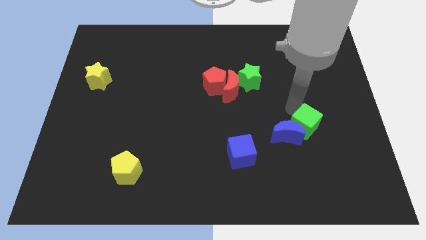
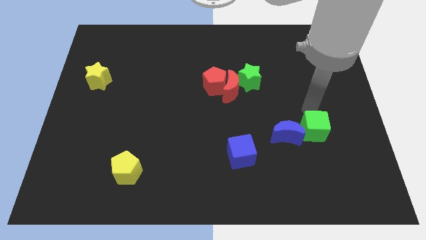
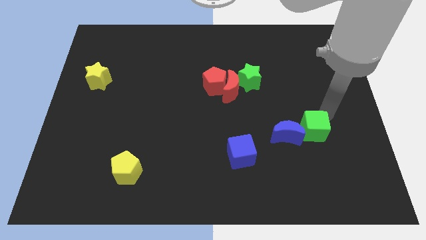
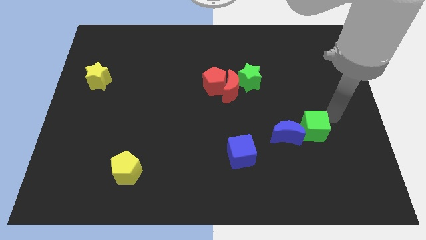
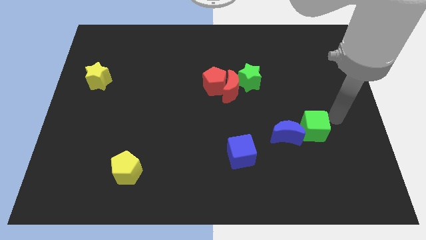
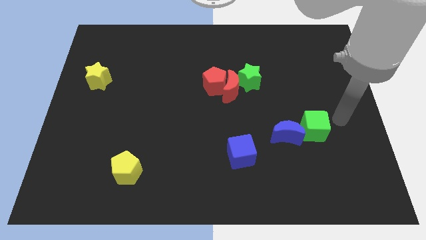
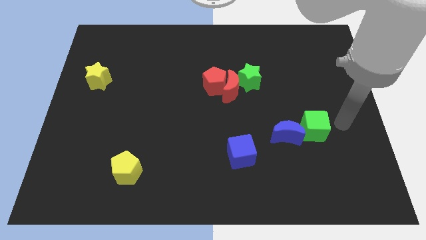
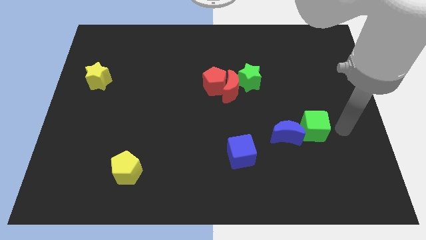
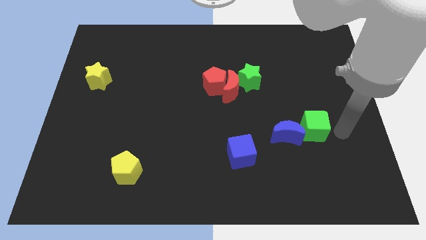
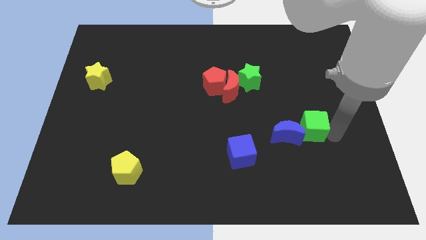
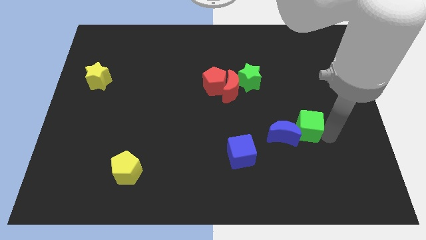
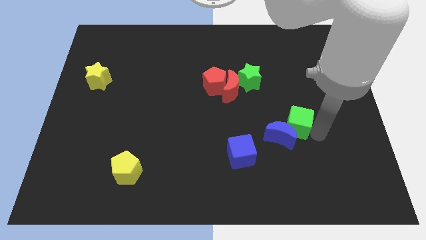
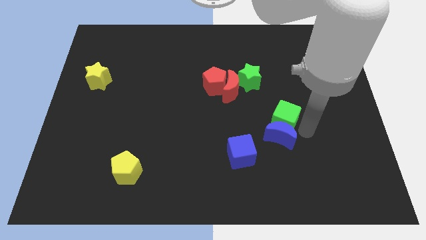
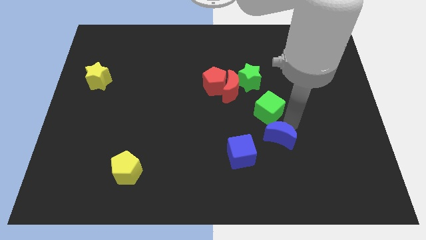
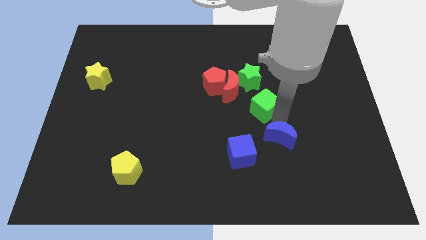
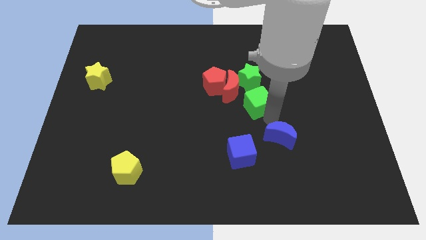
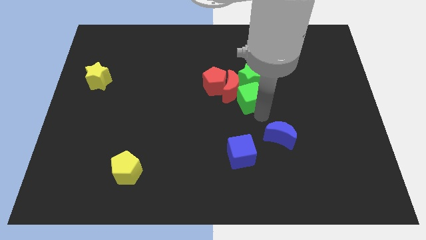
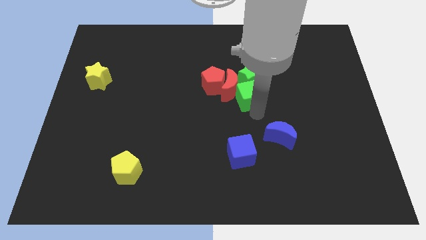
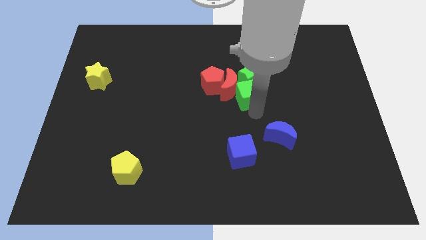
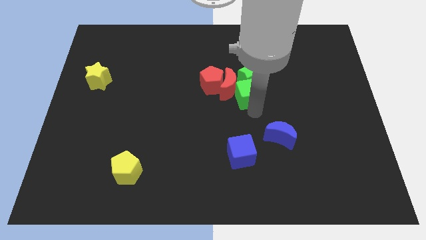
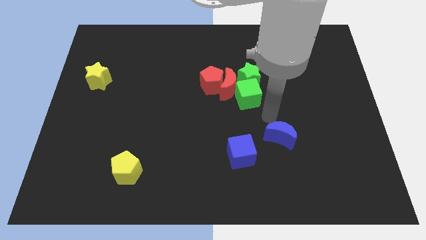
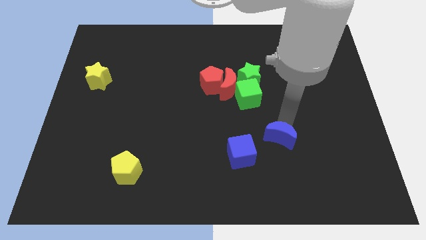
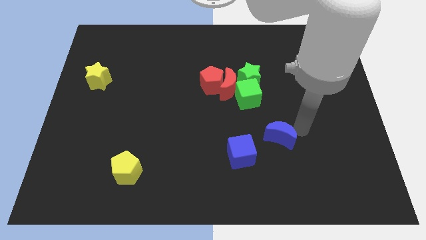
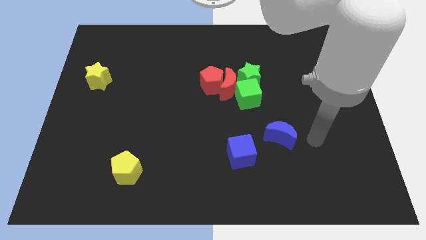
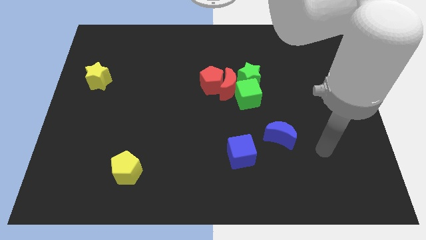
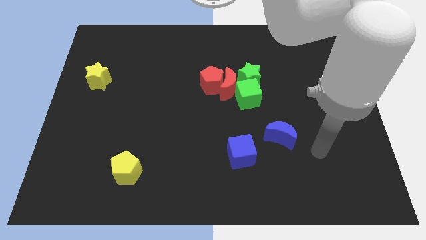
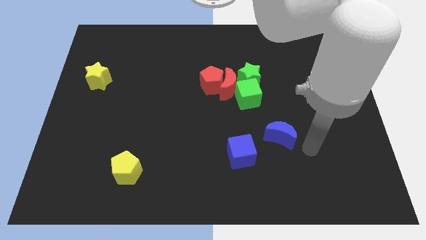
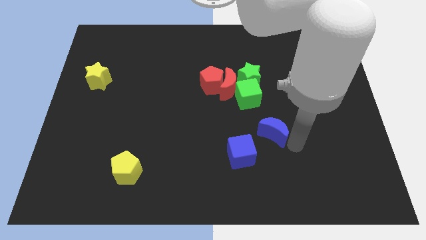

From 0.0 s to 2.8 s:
push green cube in to red moon

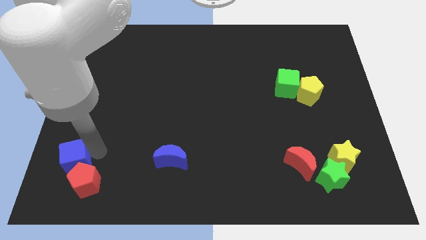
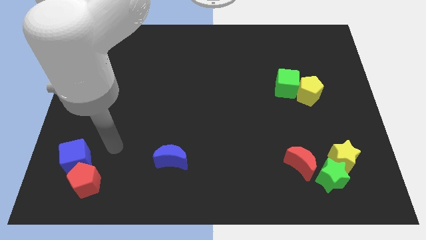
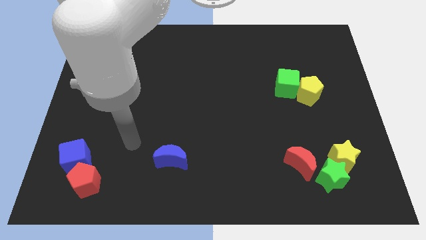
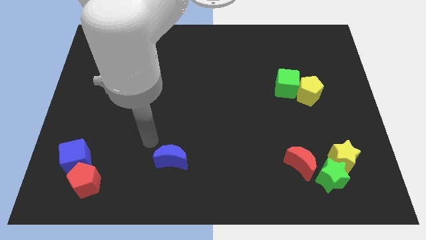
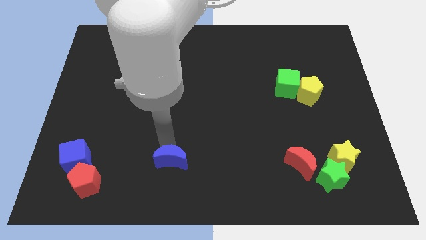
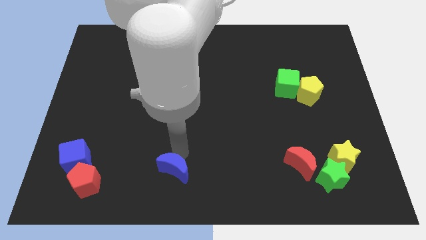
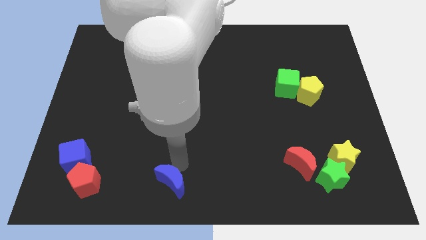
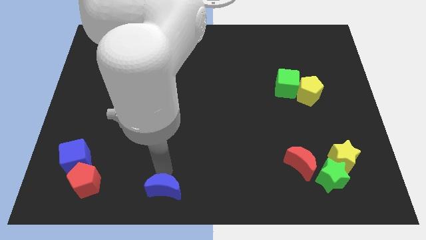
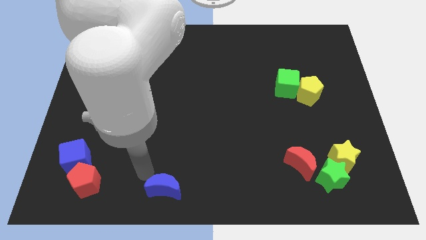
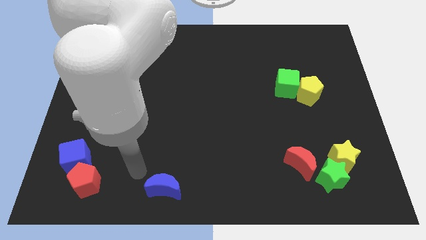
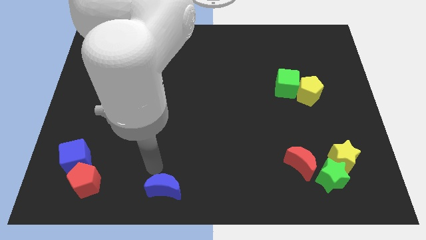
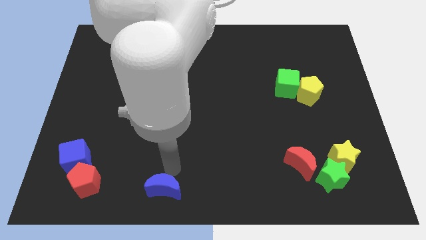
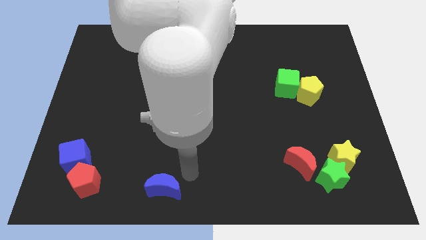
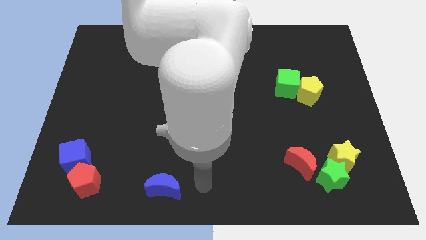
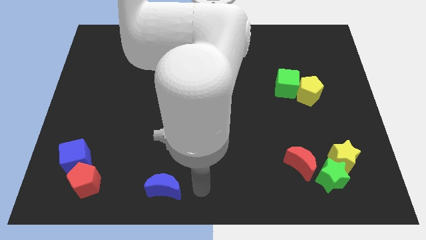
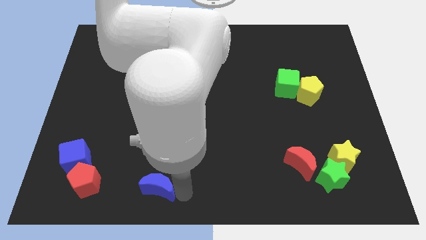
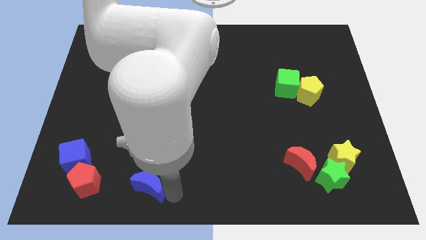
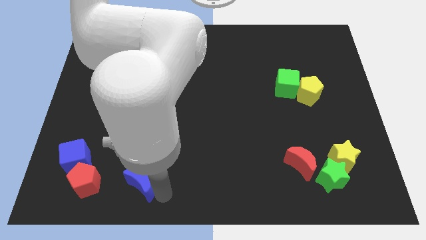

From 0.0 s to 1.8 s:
place the blue moon to the right of red pentagon

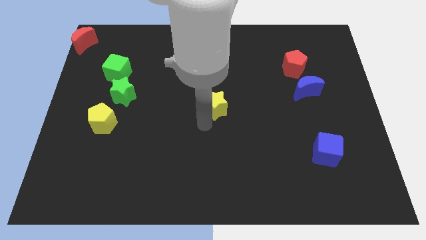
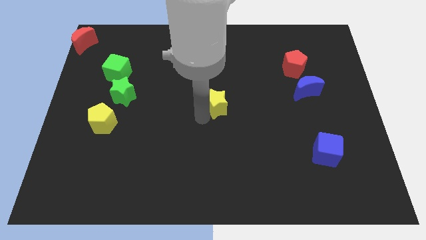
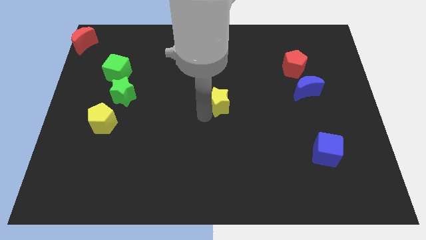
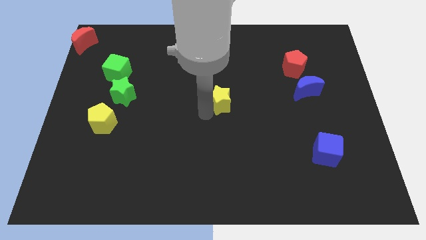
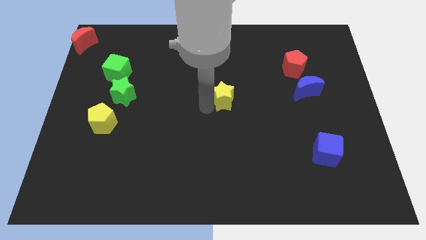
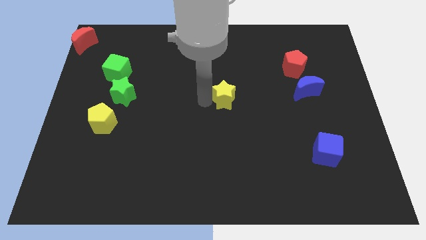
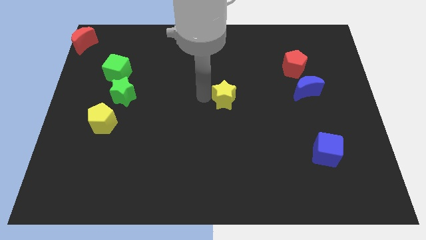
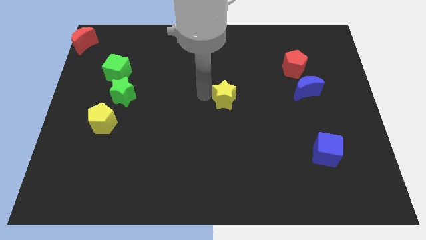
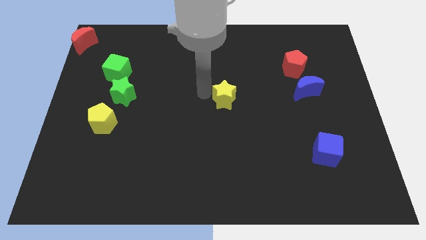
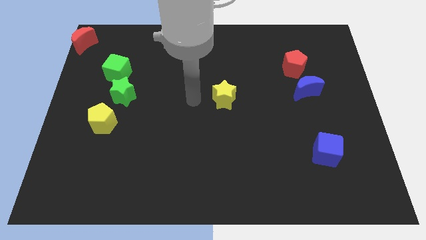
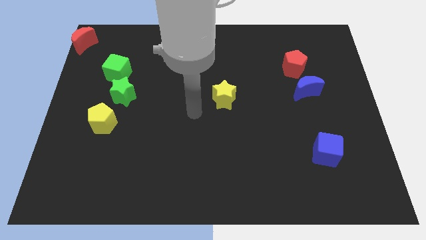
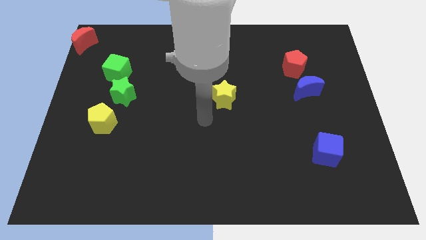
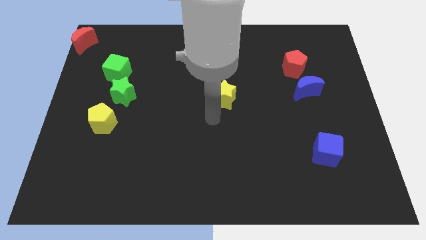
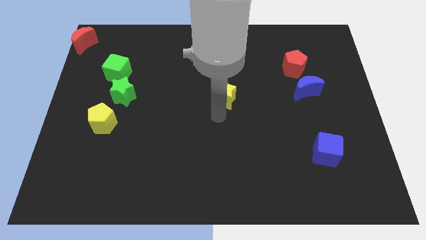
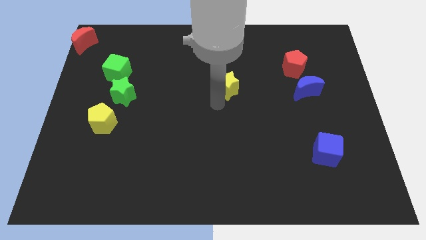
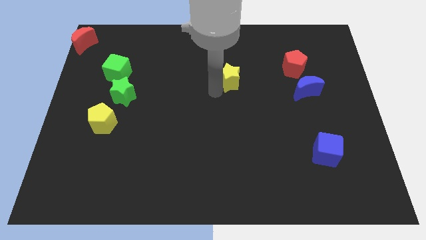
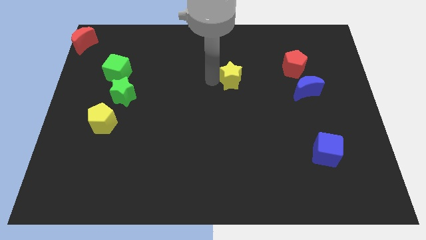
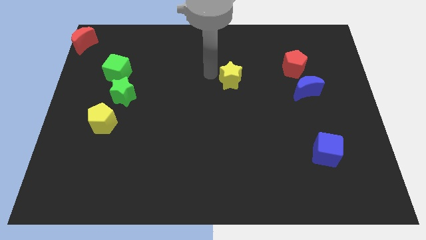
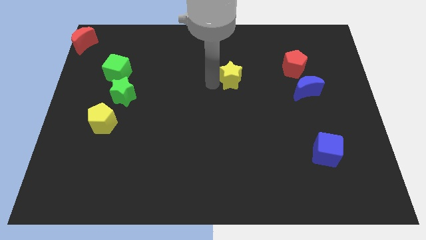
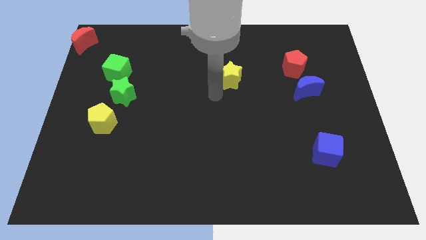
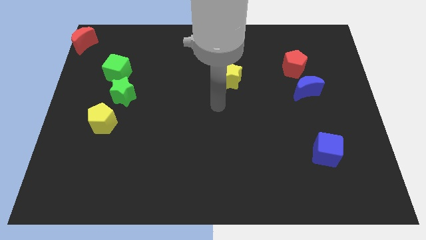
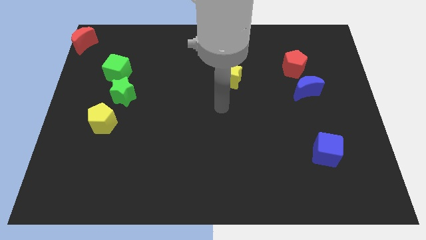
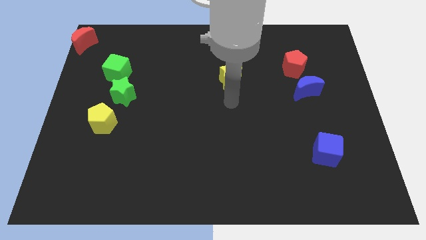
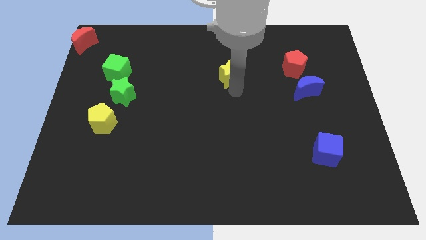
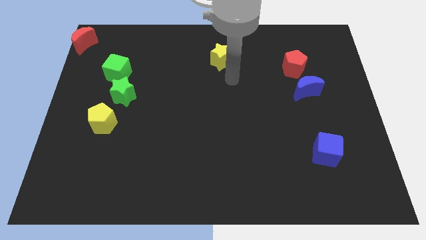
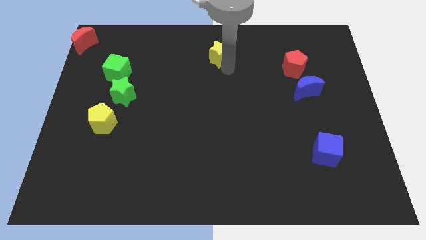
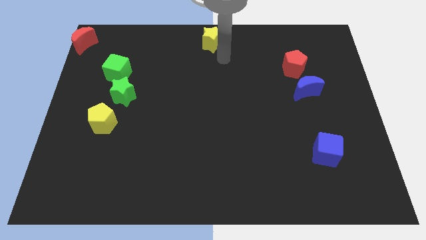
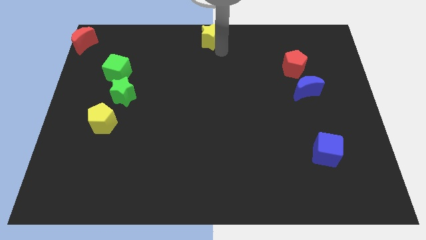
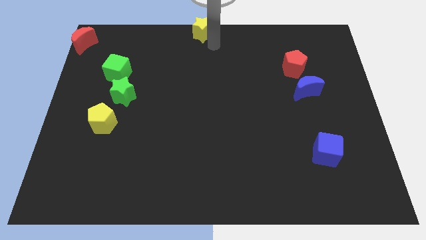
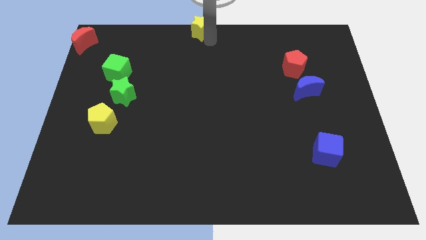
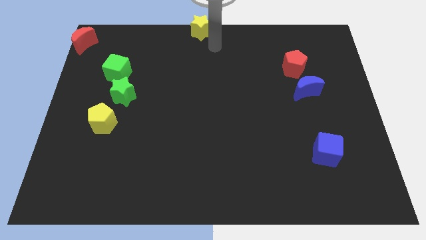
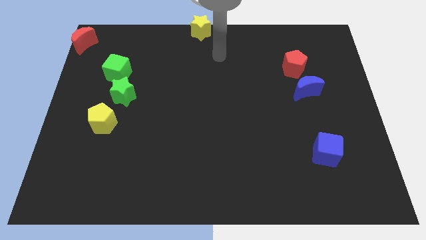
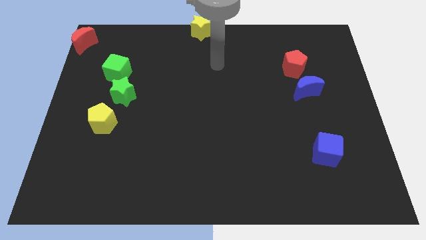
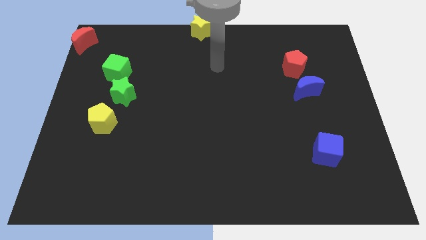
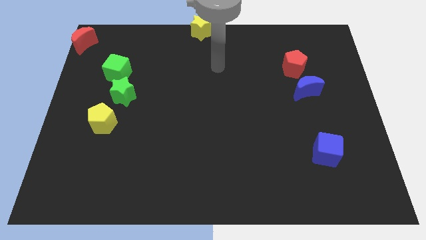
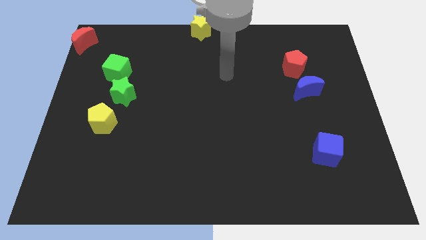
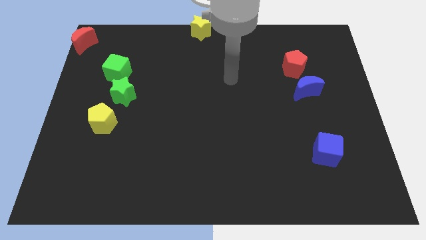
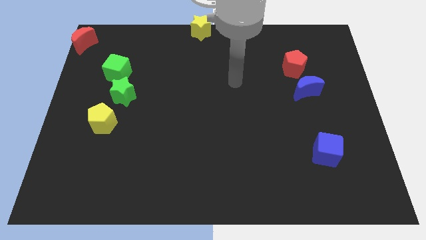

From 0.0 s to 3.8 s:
push the yellow star to the top center

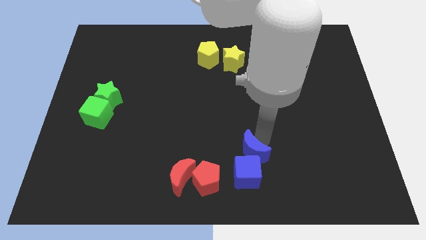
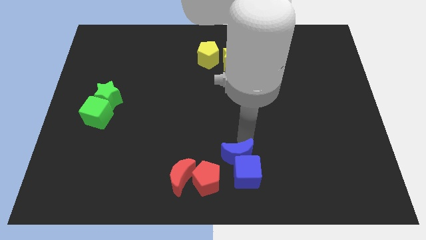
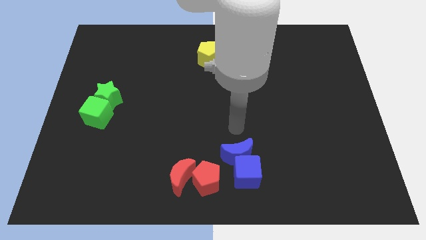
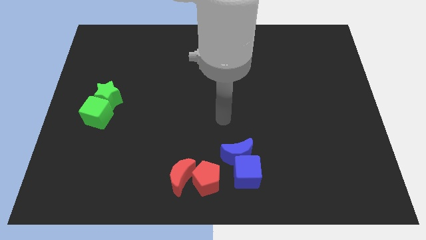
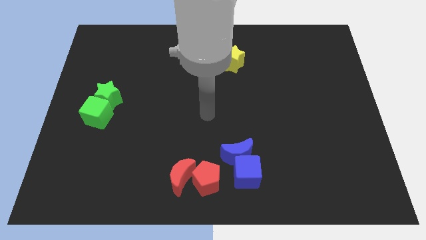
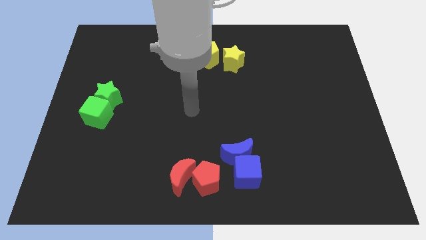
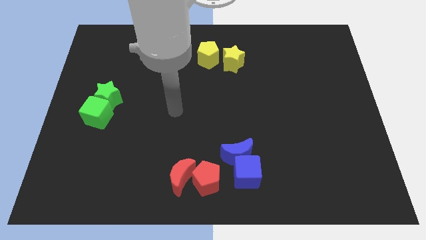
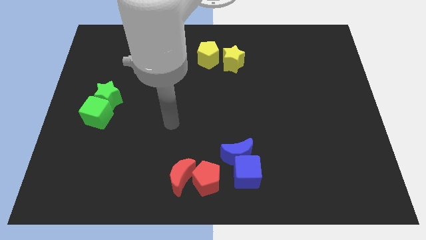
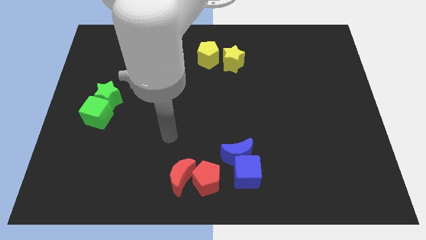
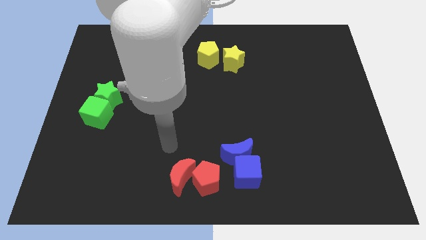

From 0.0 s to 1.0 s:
move your arm away from the blue moon
